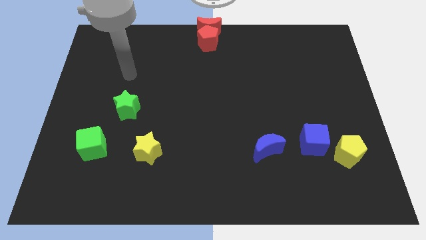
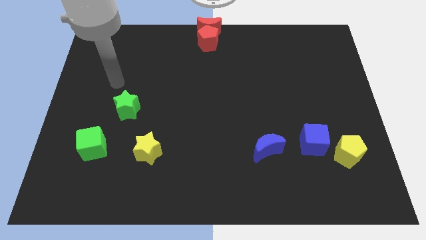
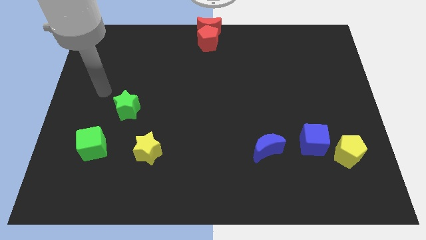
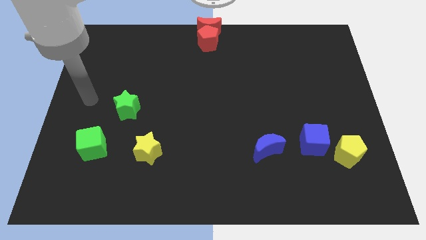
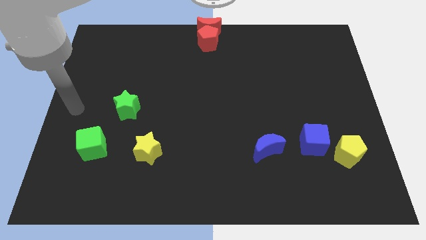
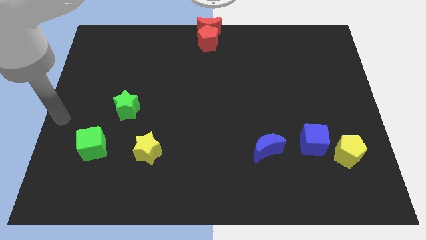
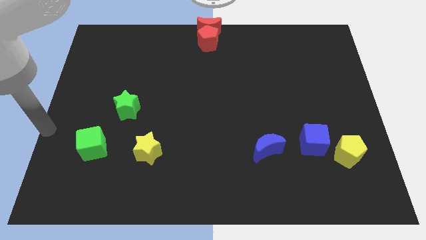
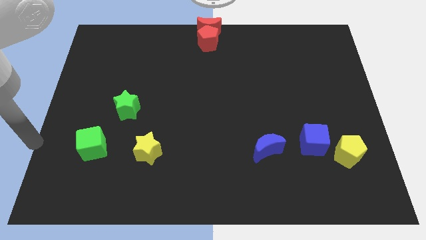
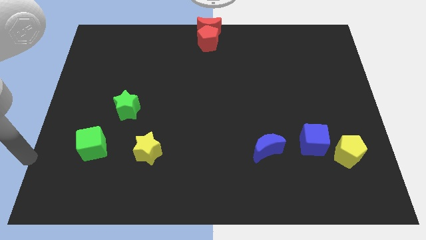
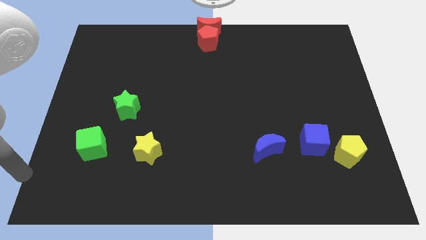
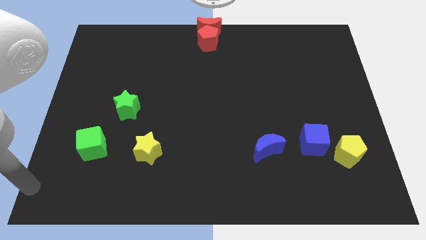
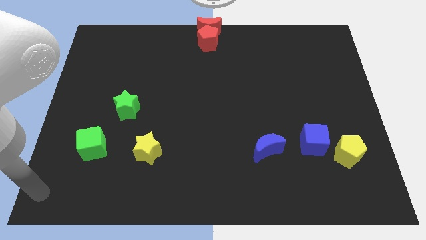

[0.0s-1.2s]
place arm at the bottom left corner of board

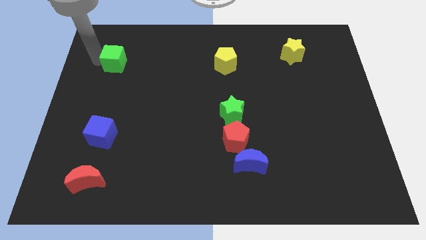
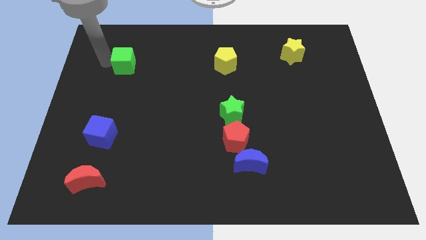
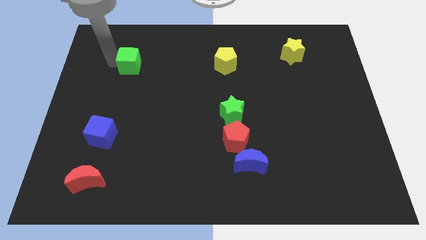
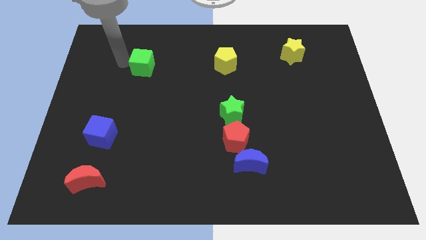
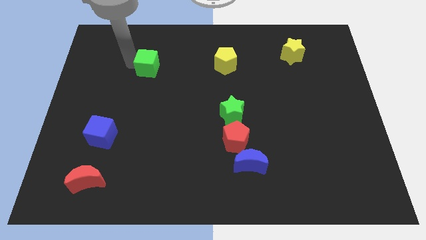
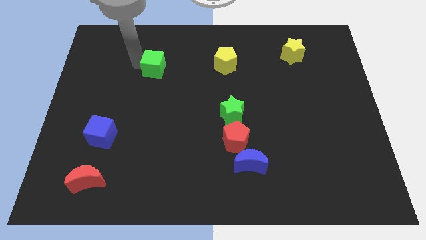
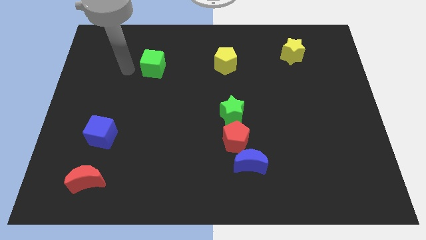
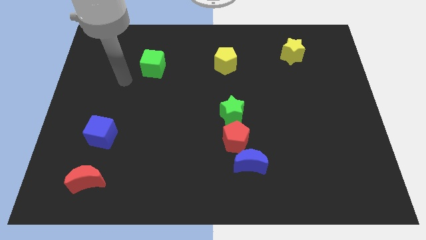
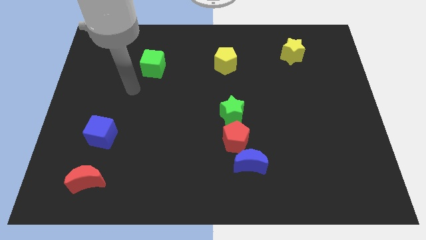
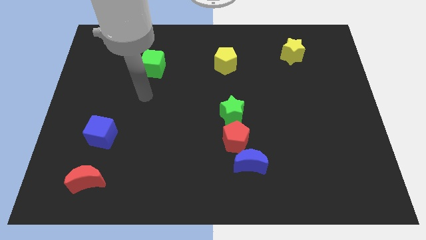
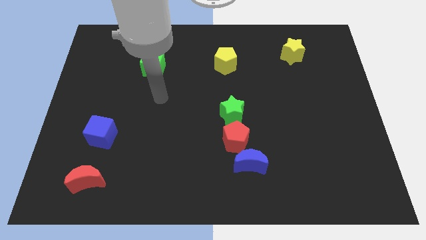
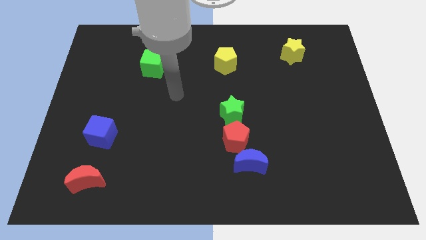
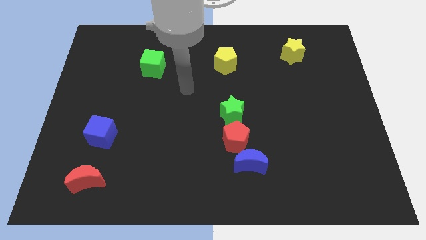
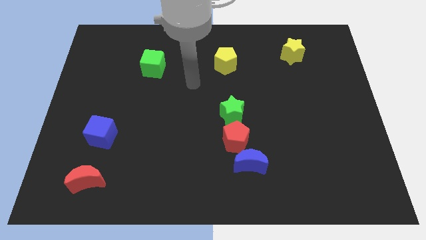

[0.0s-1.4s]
move the green cube slightly to the right

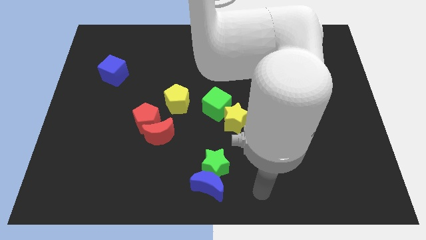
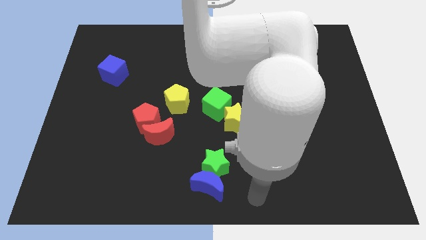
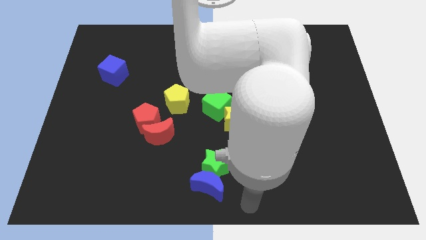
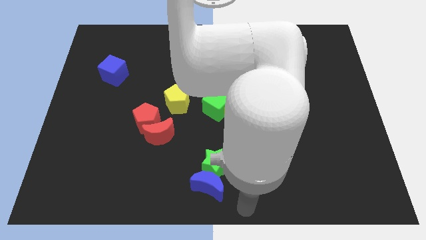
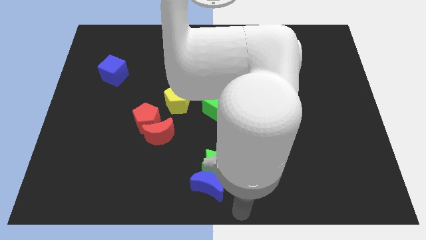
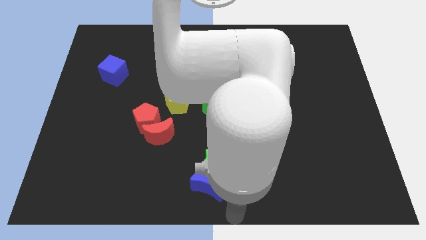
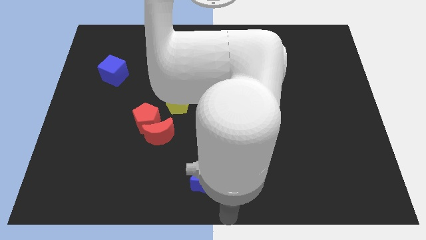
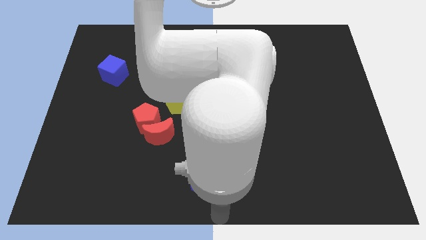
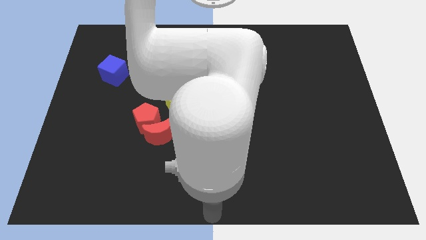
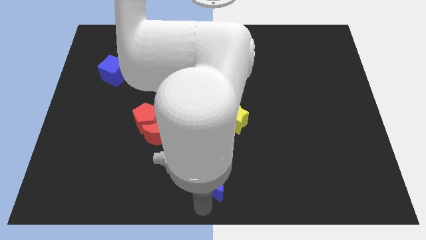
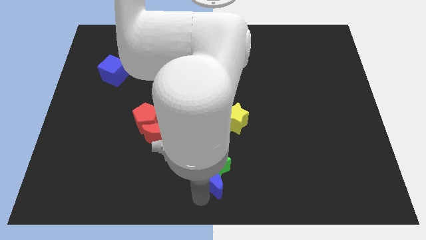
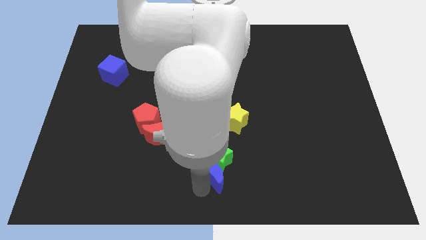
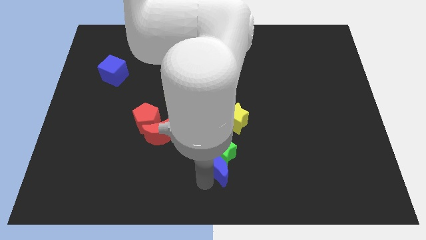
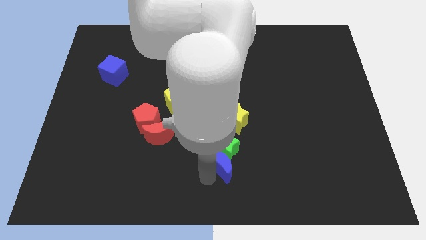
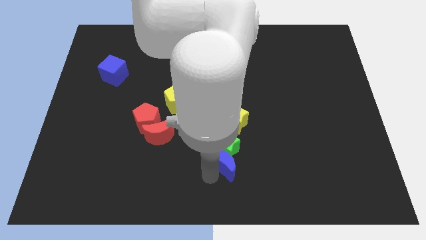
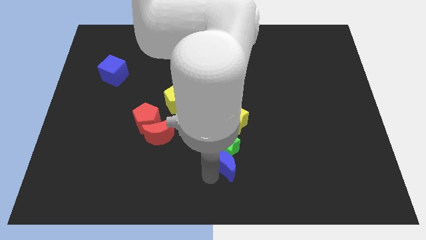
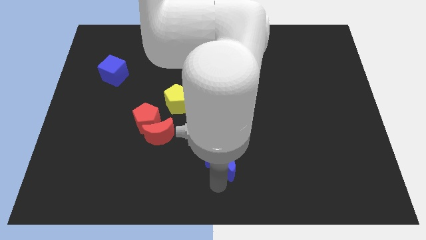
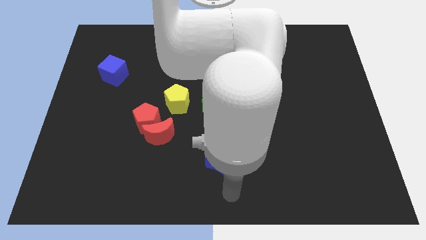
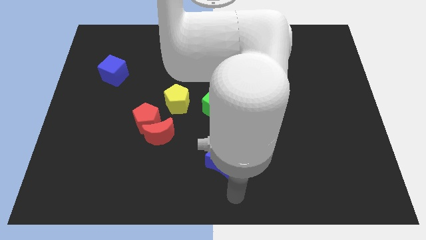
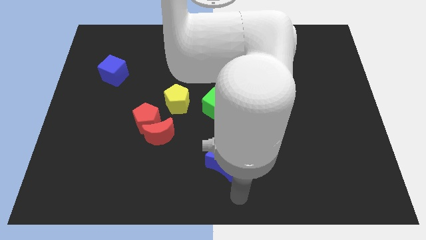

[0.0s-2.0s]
move blue moon along with the green star towards the yellow star

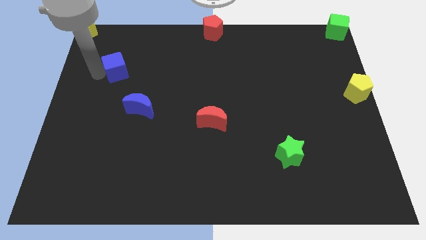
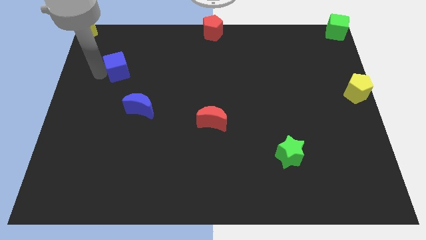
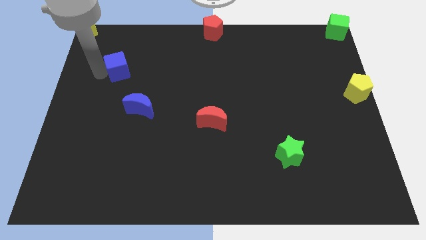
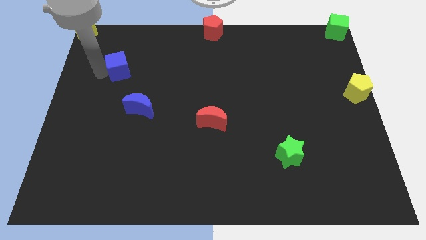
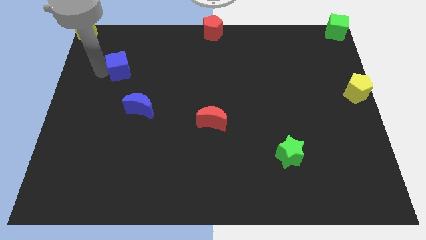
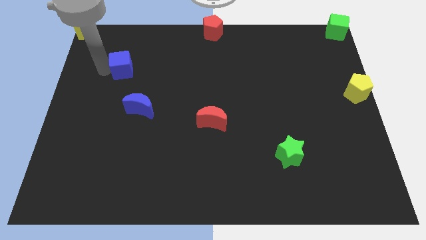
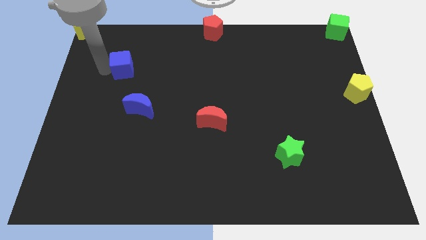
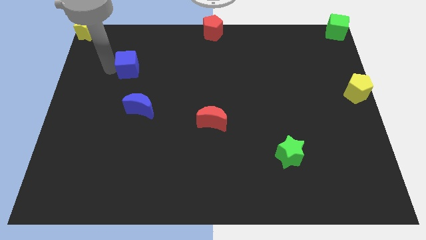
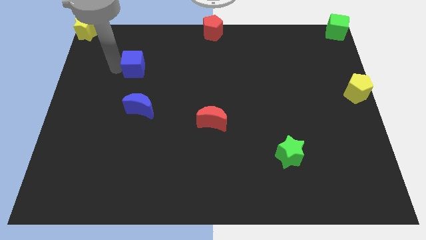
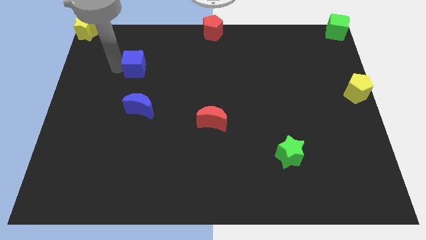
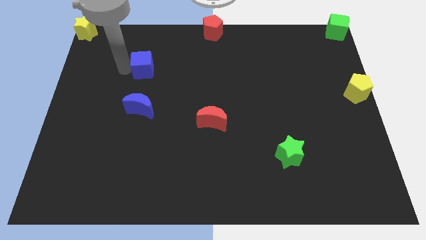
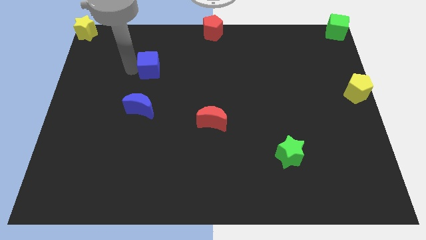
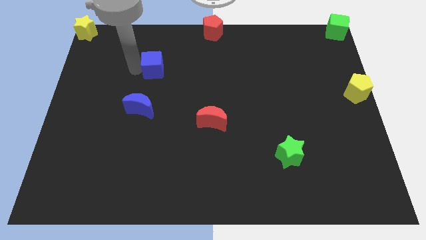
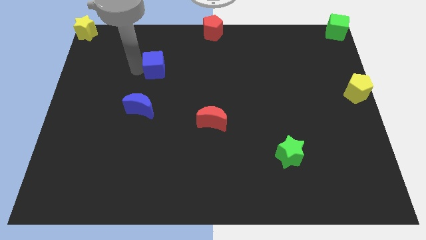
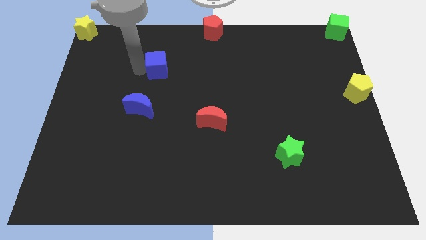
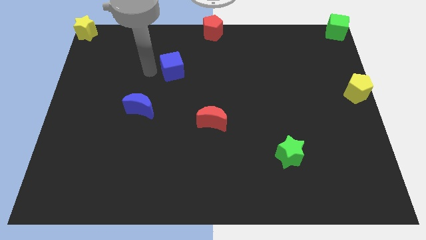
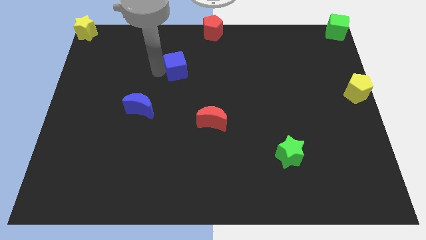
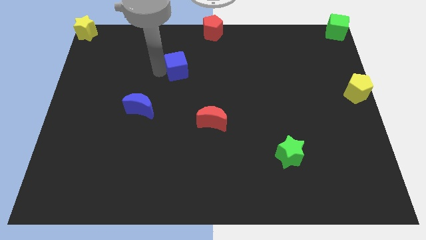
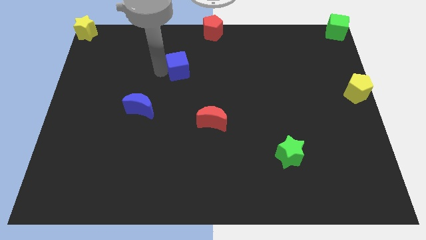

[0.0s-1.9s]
move the blue cube to the bottom left side of the red pentagon

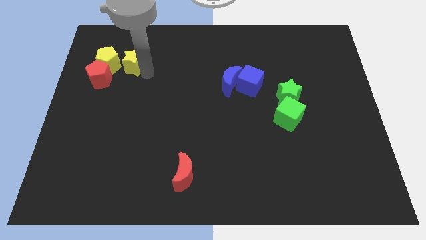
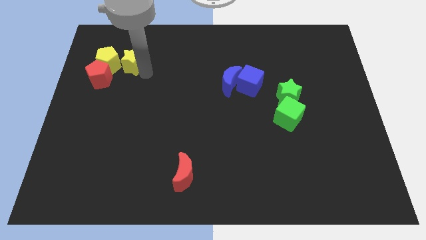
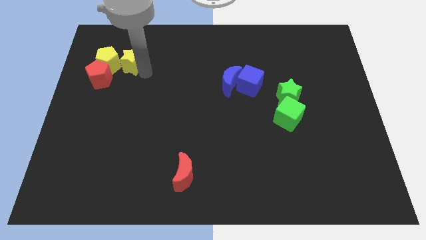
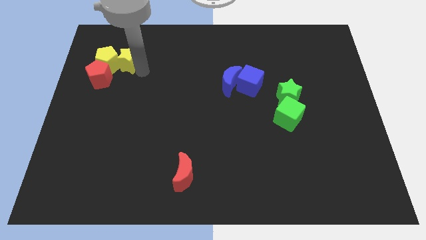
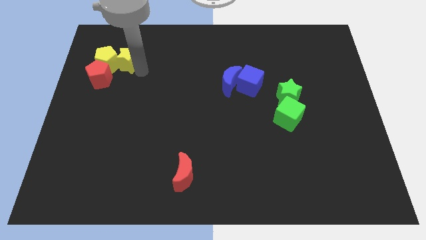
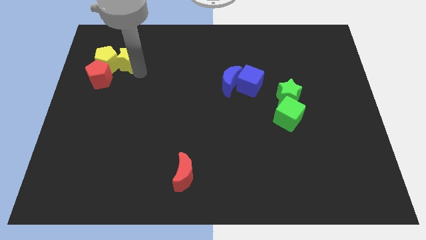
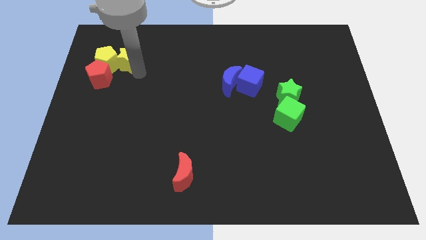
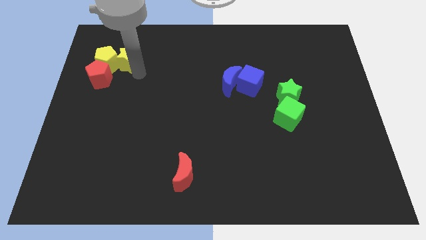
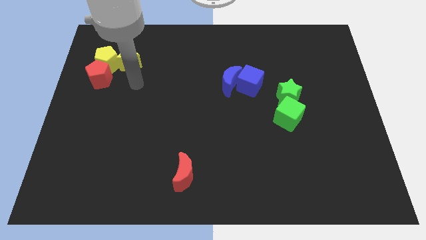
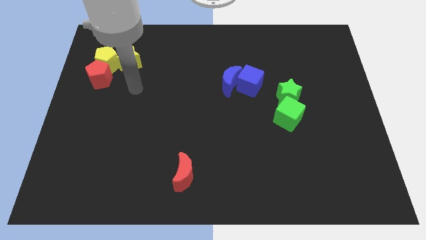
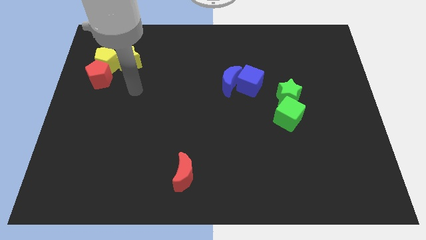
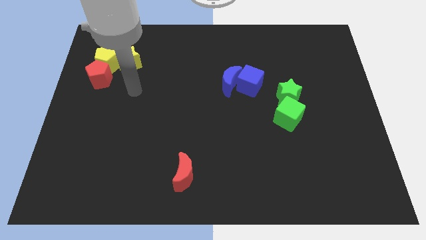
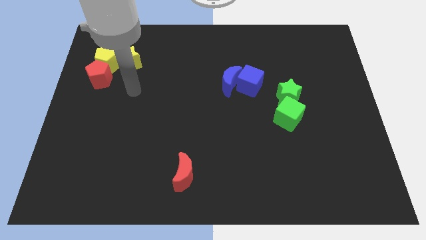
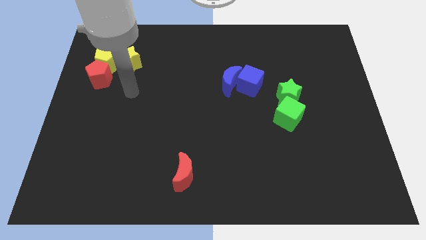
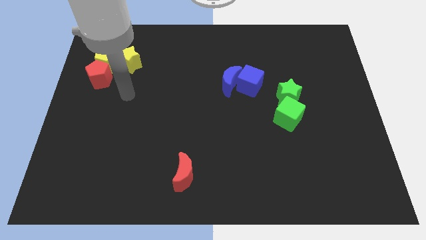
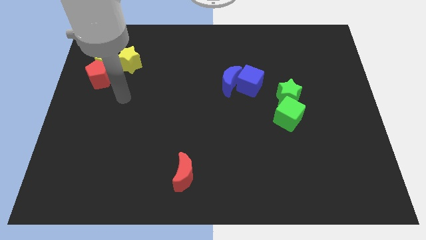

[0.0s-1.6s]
push the yellow star into the yellow pentagon

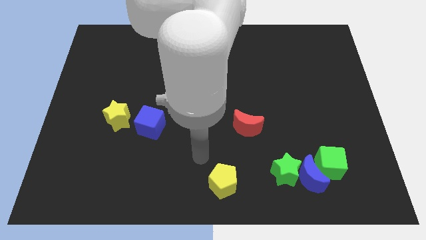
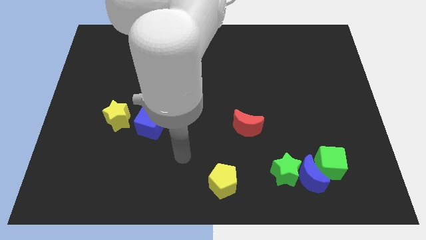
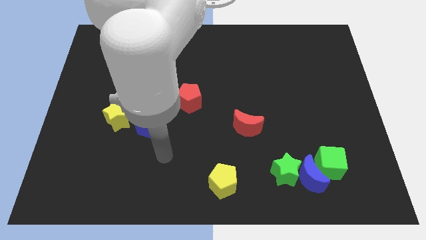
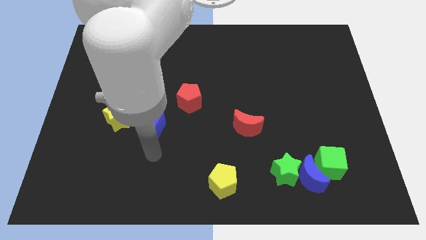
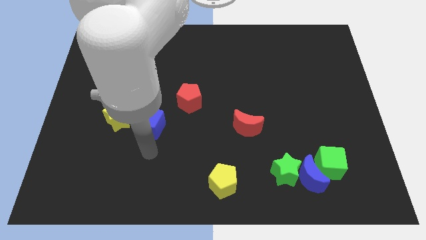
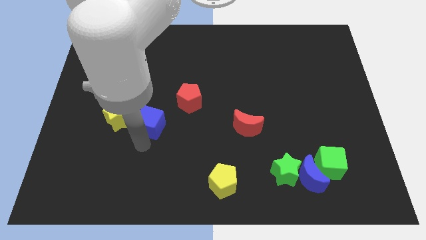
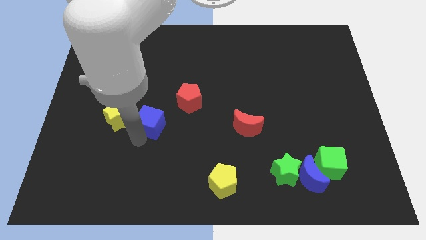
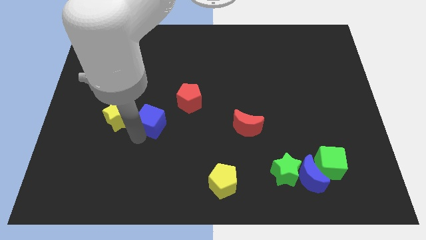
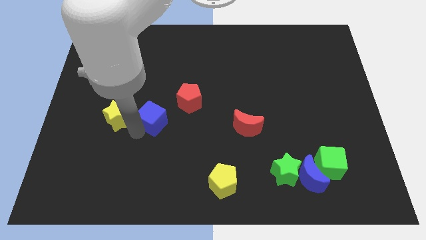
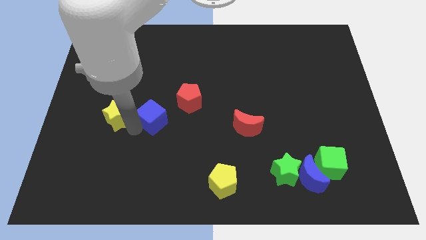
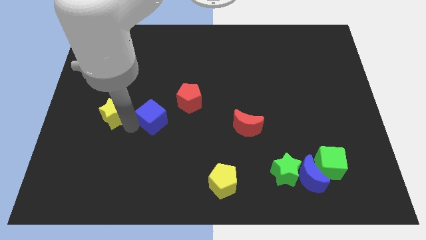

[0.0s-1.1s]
place blue cube to the right of yellow star
